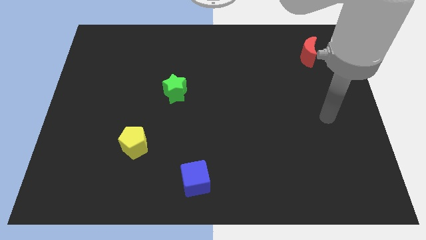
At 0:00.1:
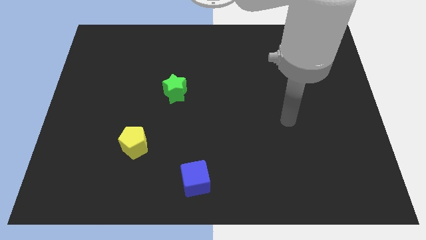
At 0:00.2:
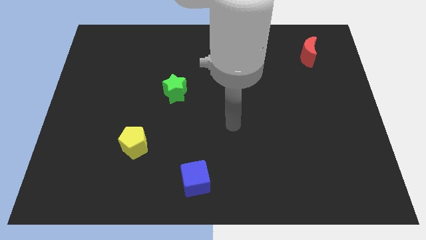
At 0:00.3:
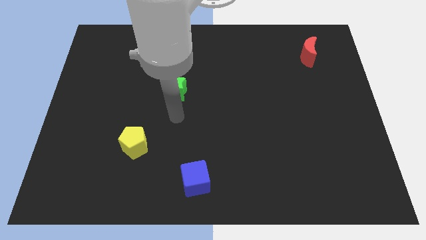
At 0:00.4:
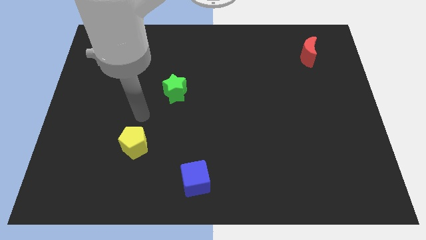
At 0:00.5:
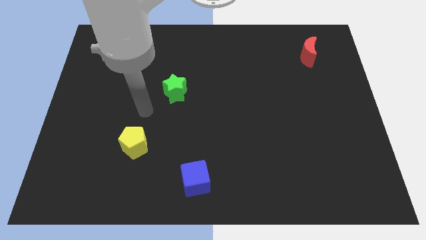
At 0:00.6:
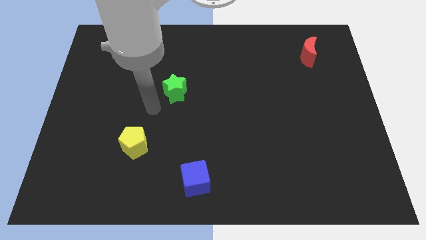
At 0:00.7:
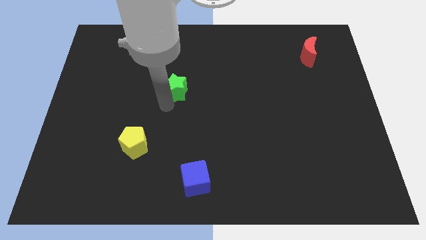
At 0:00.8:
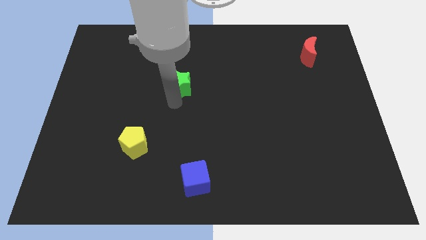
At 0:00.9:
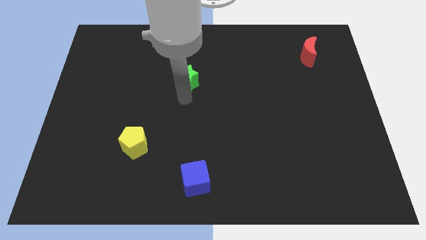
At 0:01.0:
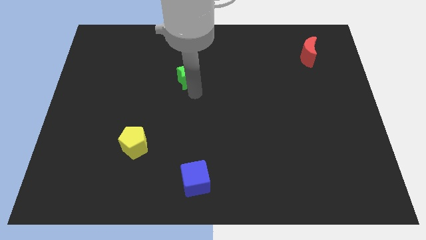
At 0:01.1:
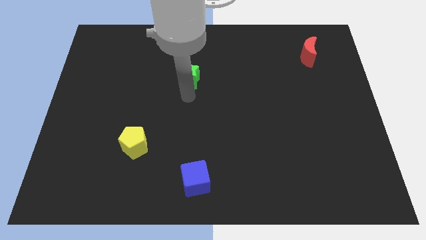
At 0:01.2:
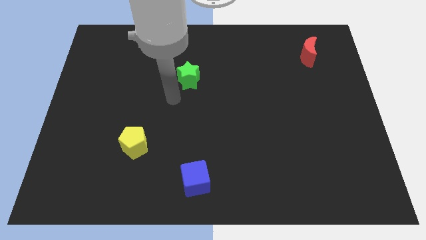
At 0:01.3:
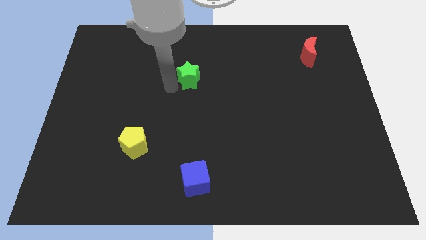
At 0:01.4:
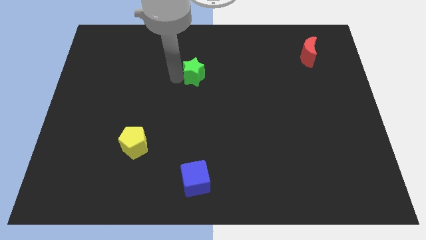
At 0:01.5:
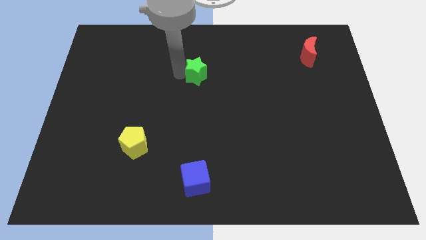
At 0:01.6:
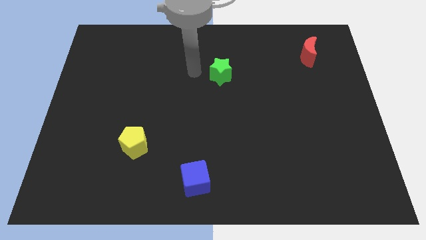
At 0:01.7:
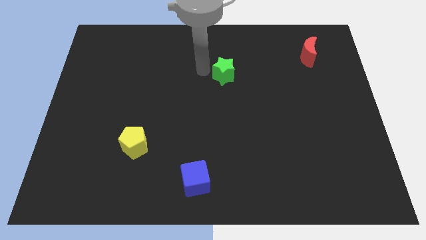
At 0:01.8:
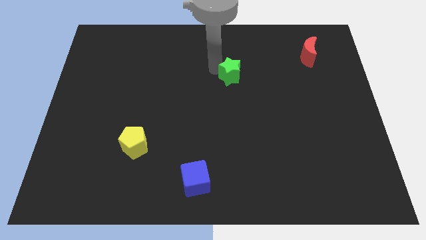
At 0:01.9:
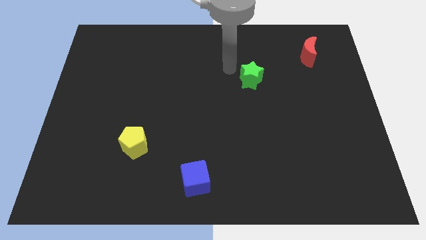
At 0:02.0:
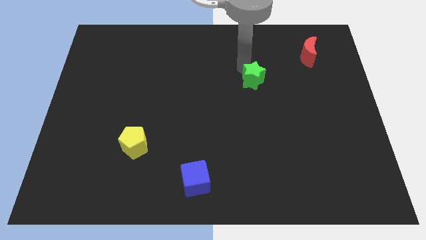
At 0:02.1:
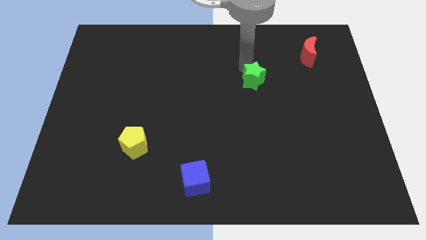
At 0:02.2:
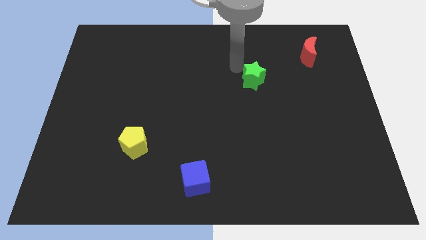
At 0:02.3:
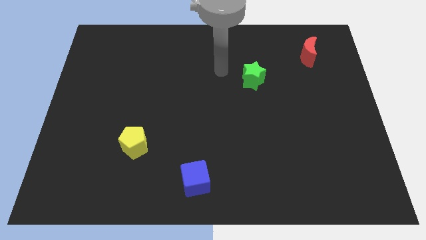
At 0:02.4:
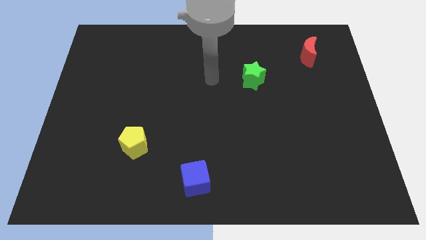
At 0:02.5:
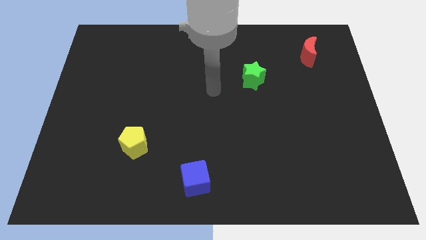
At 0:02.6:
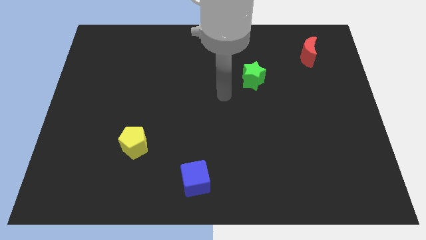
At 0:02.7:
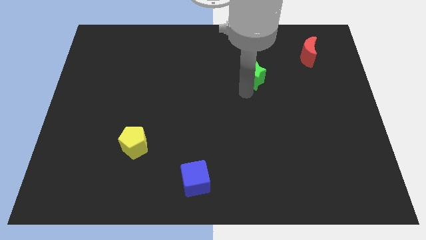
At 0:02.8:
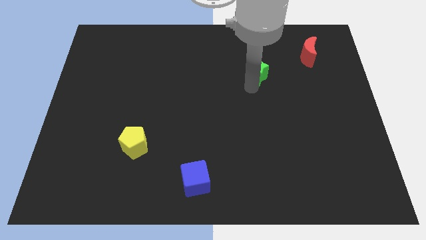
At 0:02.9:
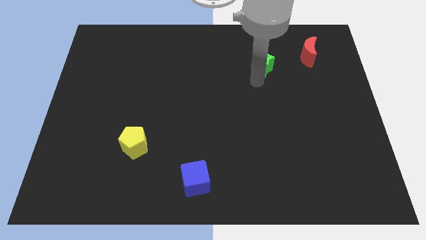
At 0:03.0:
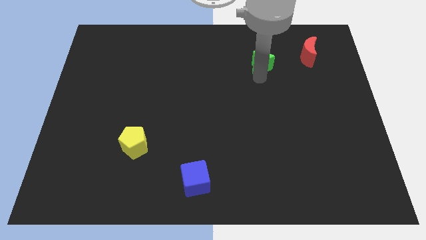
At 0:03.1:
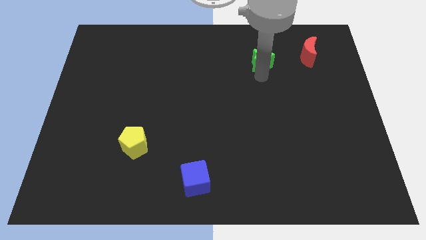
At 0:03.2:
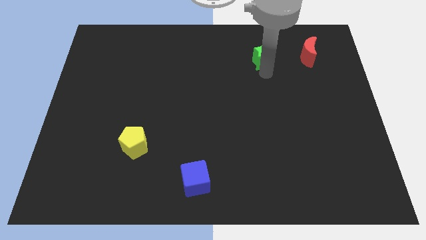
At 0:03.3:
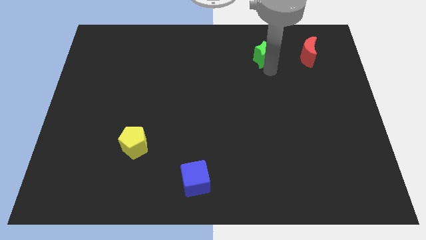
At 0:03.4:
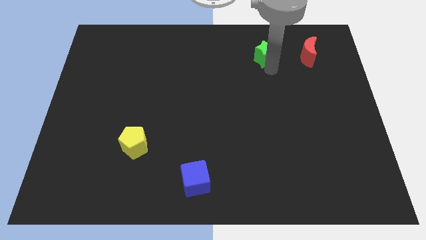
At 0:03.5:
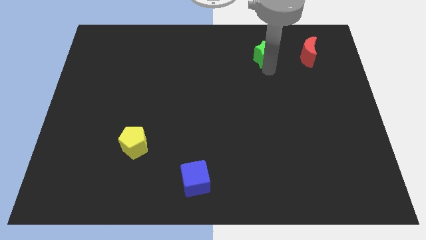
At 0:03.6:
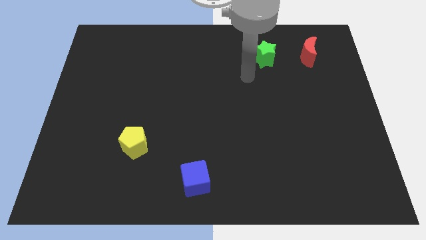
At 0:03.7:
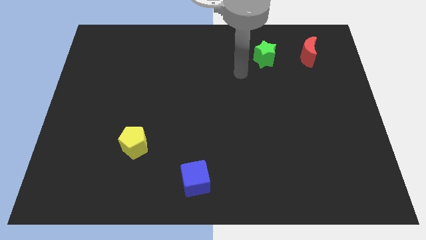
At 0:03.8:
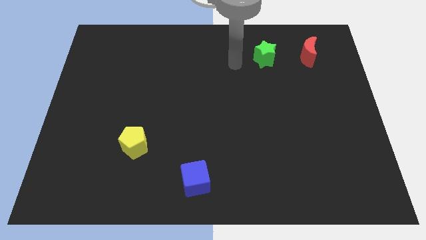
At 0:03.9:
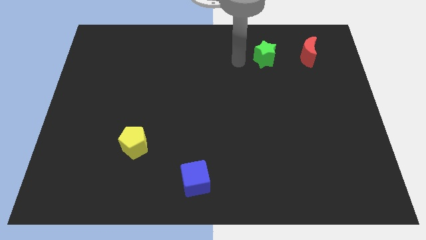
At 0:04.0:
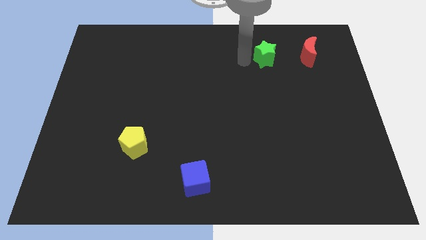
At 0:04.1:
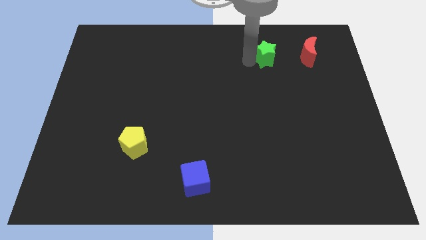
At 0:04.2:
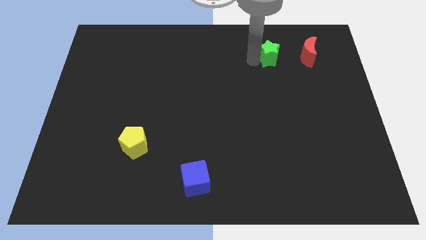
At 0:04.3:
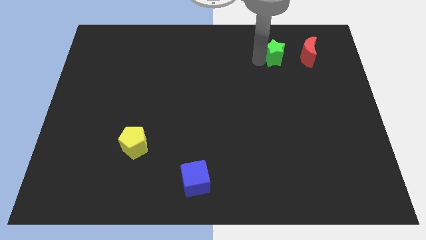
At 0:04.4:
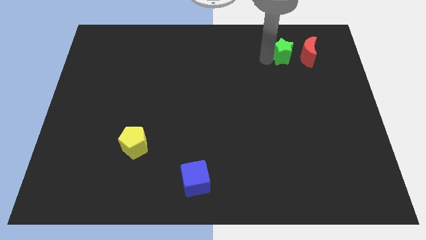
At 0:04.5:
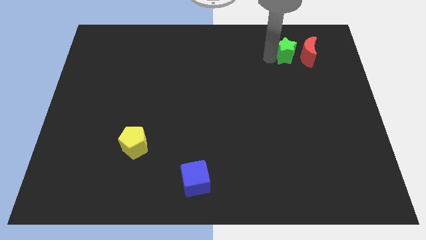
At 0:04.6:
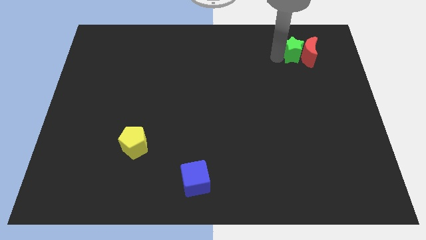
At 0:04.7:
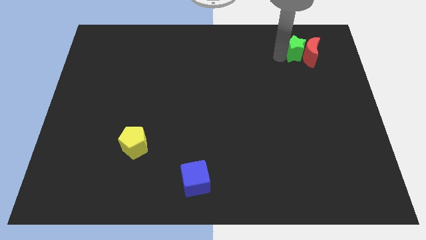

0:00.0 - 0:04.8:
move the star close to the red moon

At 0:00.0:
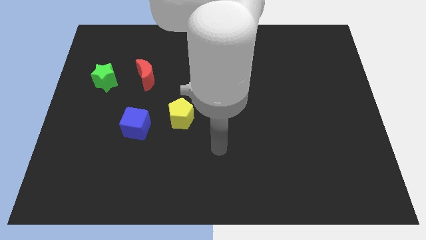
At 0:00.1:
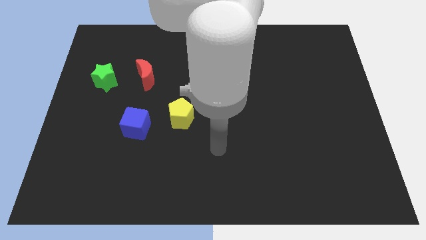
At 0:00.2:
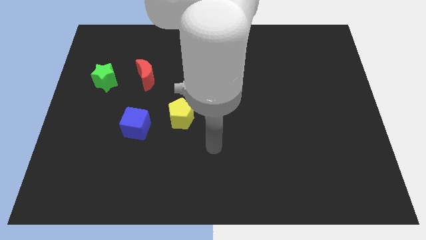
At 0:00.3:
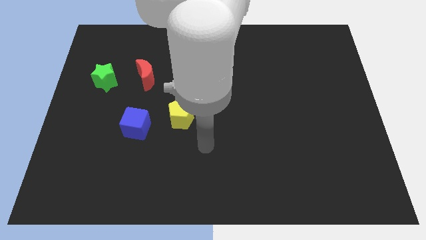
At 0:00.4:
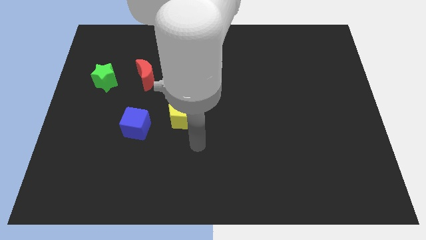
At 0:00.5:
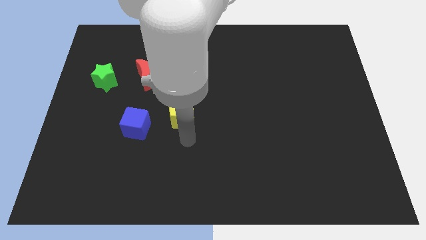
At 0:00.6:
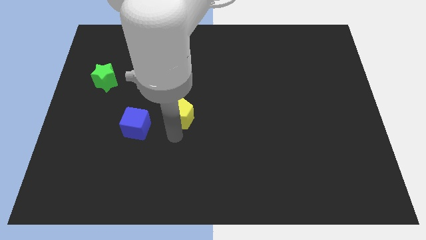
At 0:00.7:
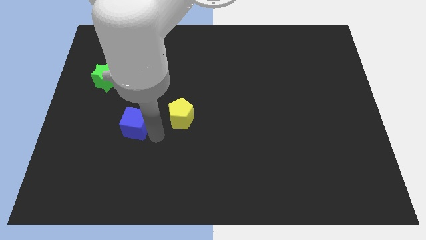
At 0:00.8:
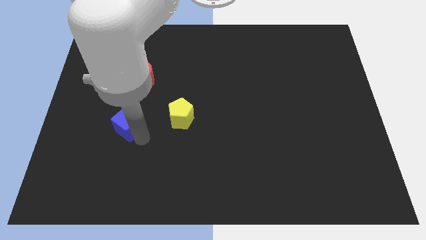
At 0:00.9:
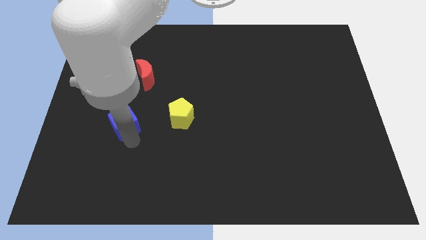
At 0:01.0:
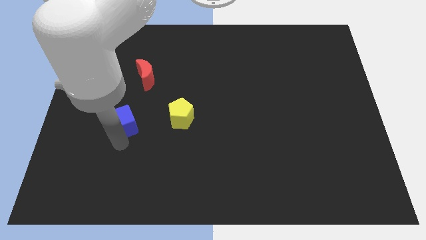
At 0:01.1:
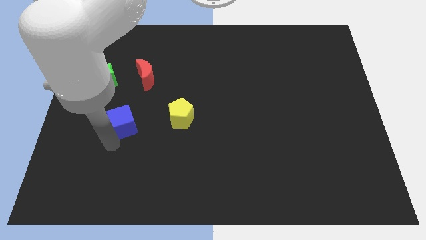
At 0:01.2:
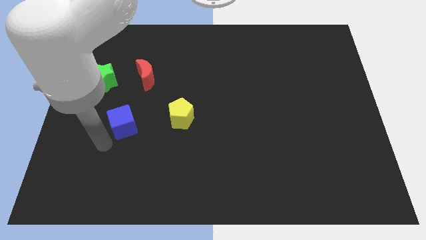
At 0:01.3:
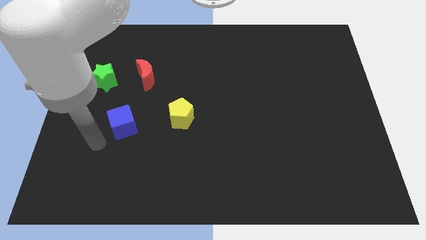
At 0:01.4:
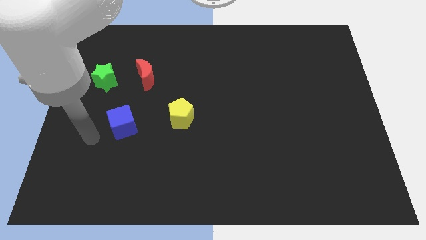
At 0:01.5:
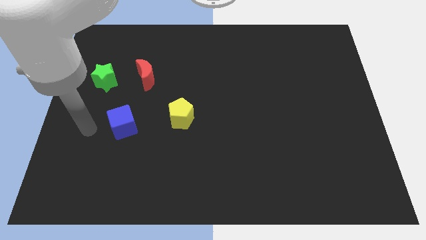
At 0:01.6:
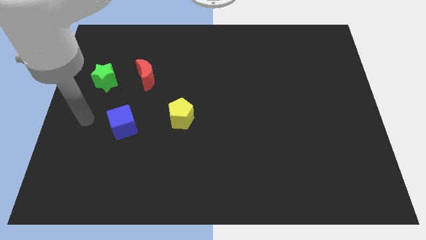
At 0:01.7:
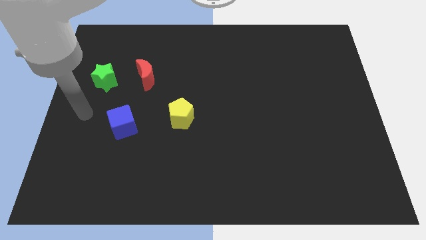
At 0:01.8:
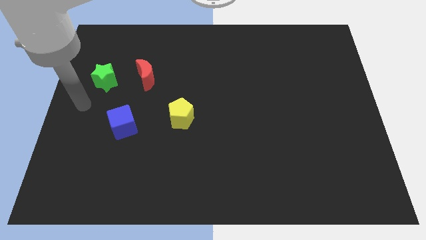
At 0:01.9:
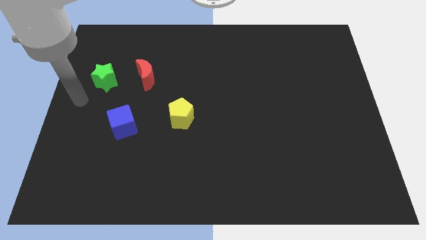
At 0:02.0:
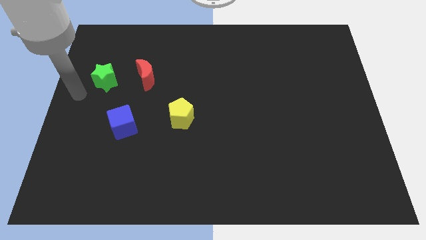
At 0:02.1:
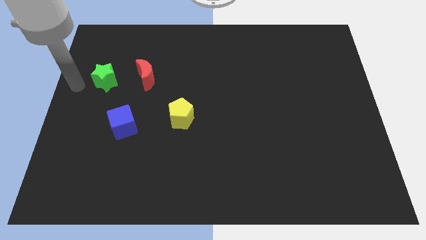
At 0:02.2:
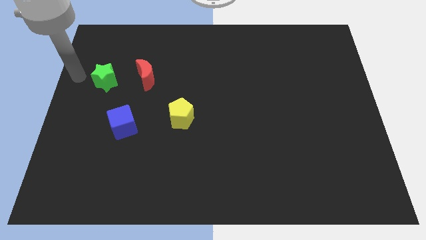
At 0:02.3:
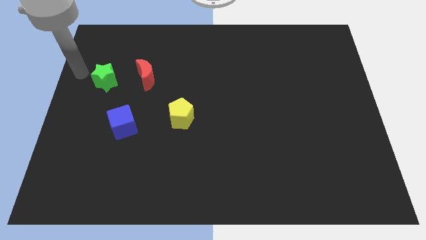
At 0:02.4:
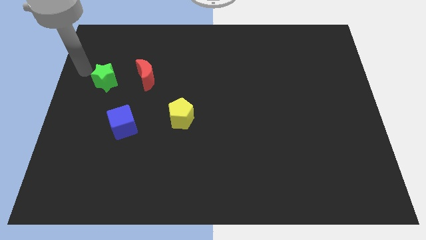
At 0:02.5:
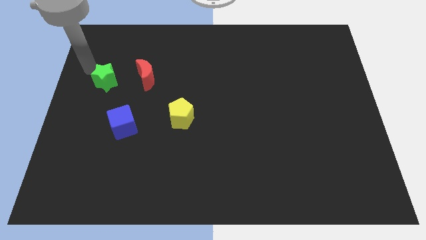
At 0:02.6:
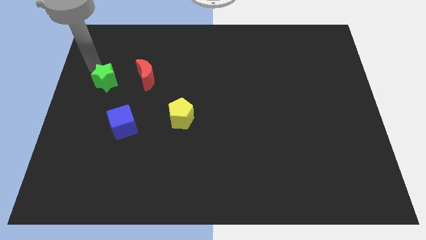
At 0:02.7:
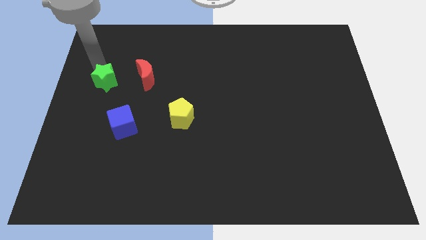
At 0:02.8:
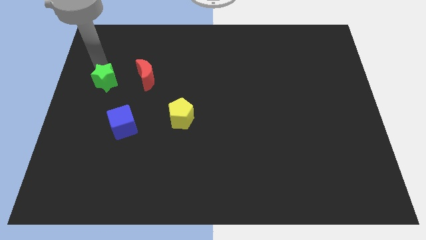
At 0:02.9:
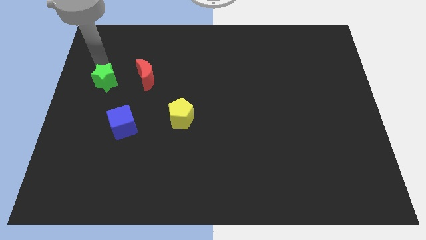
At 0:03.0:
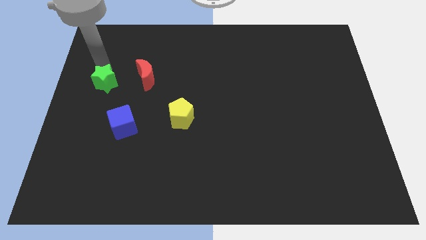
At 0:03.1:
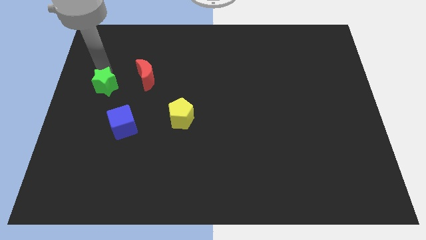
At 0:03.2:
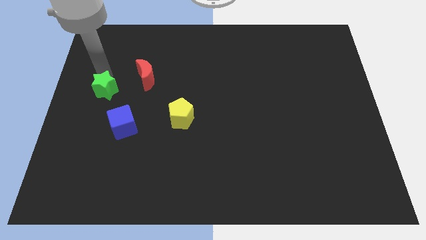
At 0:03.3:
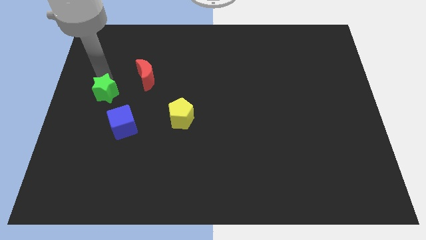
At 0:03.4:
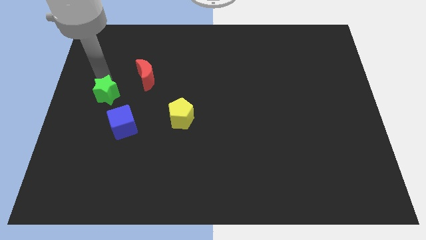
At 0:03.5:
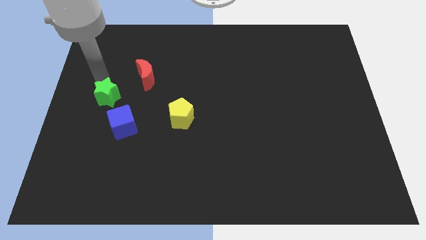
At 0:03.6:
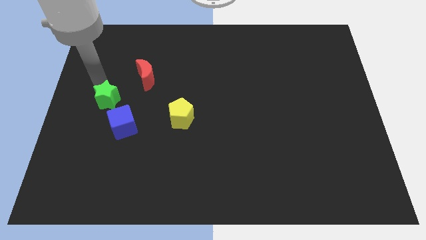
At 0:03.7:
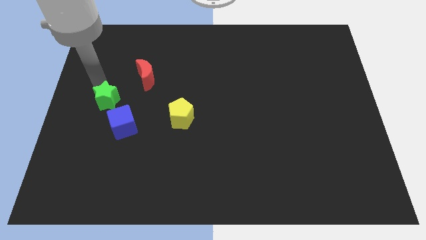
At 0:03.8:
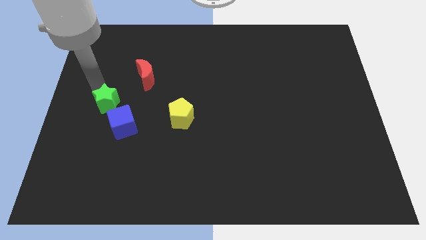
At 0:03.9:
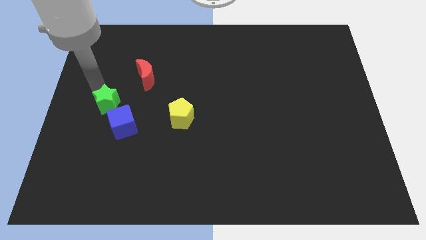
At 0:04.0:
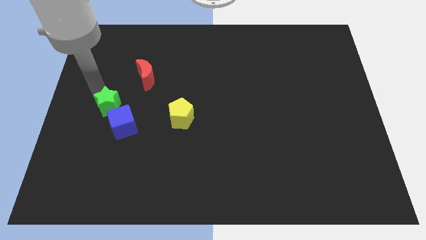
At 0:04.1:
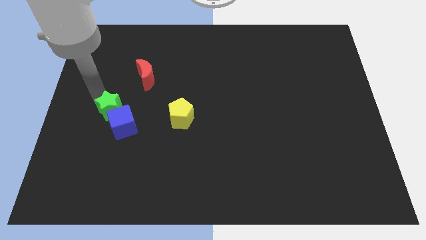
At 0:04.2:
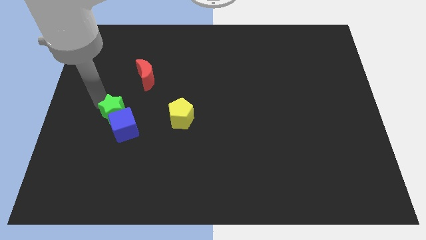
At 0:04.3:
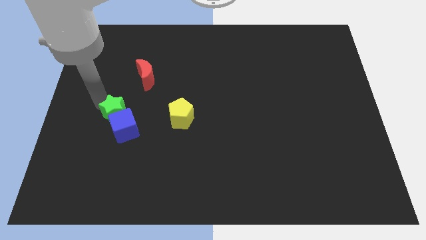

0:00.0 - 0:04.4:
move the green star towards the blue block
